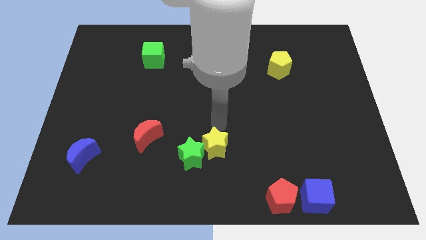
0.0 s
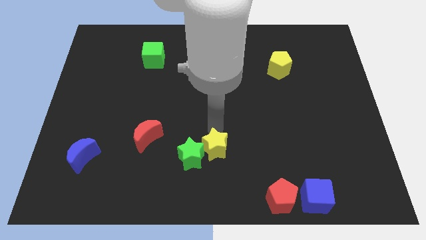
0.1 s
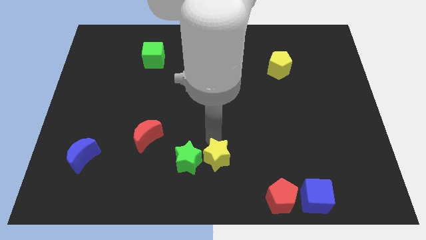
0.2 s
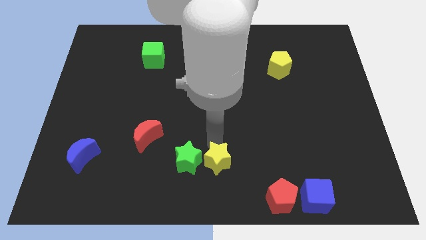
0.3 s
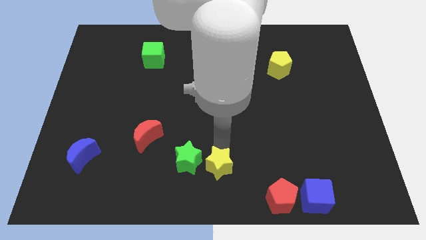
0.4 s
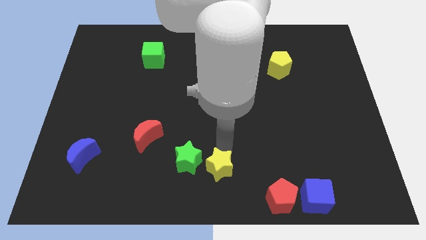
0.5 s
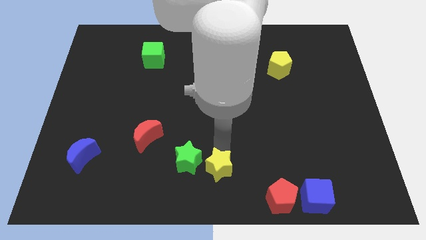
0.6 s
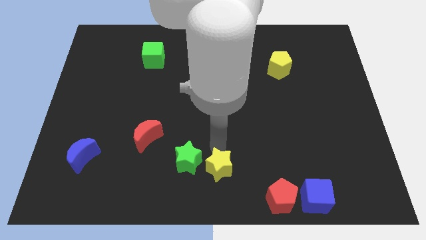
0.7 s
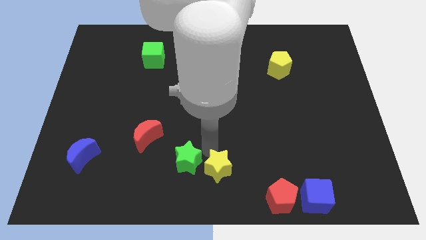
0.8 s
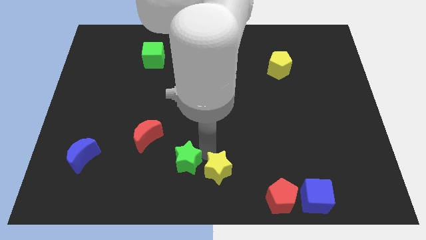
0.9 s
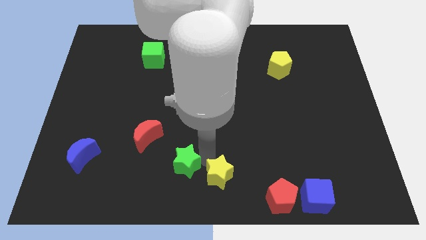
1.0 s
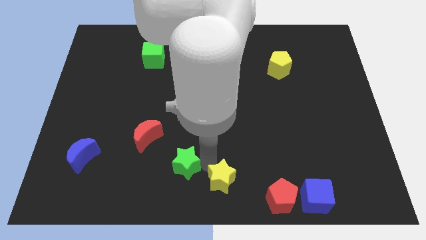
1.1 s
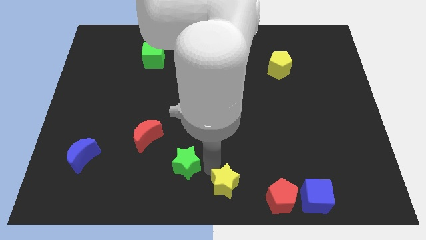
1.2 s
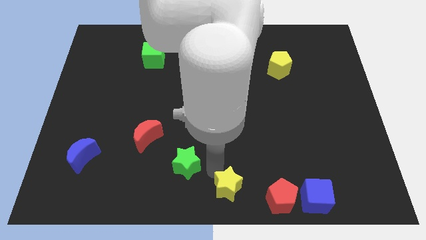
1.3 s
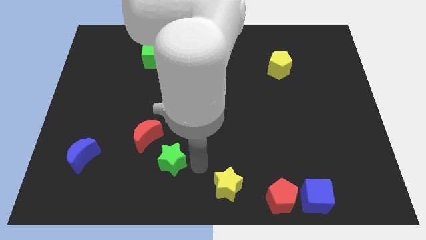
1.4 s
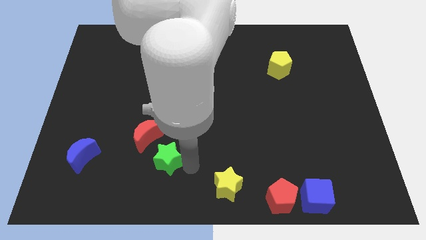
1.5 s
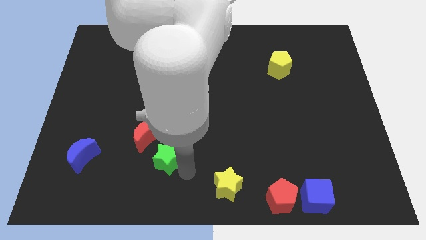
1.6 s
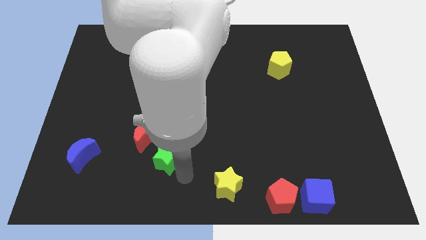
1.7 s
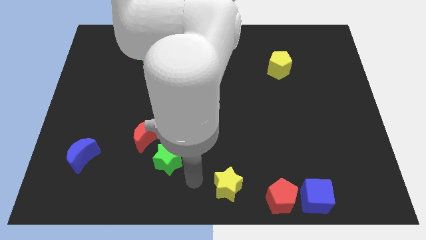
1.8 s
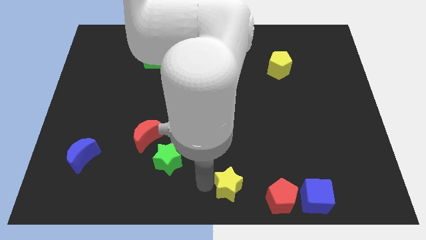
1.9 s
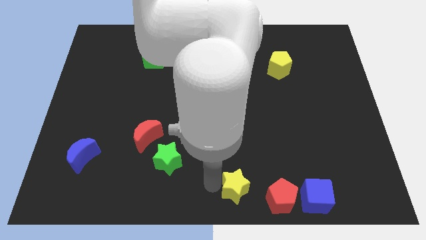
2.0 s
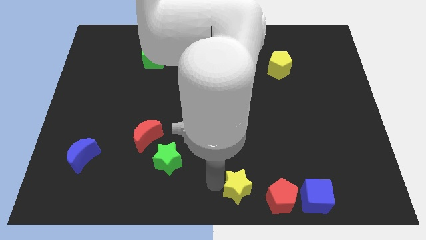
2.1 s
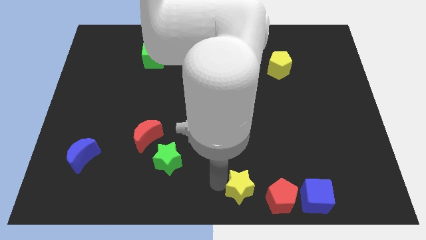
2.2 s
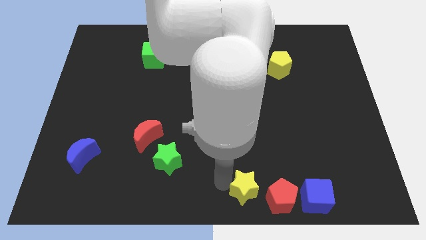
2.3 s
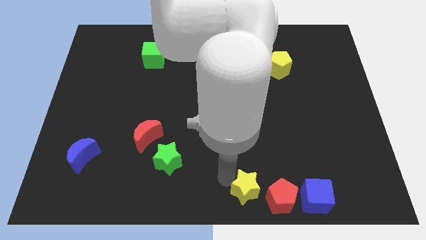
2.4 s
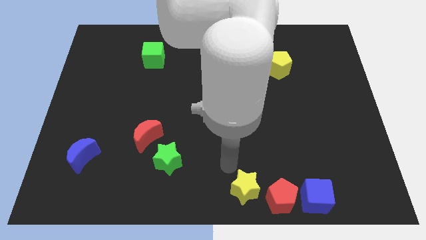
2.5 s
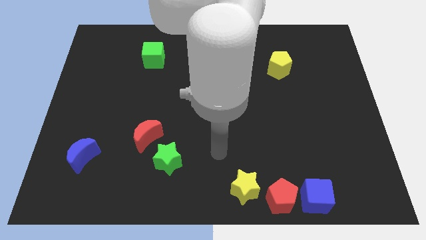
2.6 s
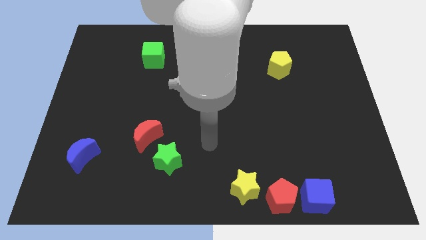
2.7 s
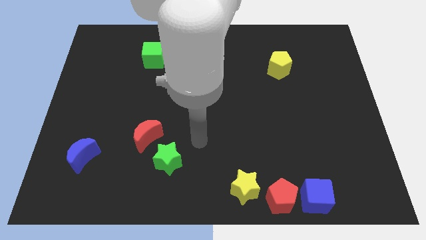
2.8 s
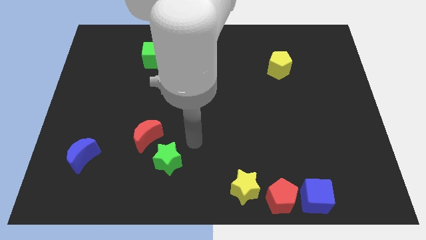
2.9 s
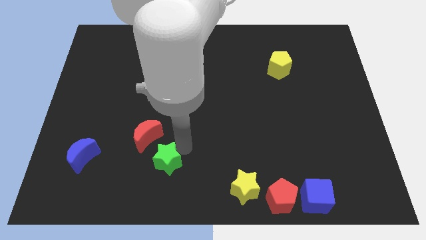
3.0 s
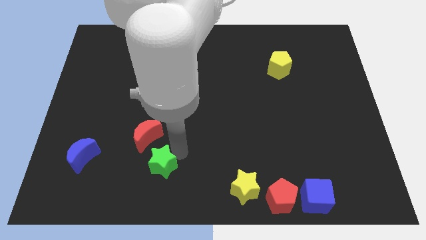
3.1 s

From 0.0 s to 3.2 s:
push the yellow star to the left of the red pentagon

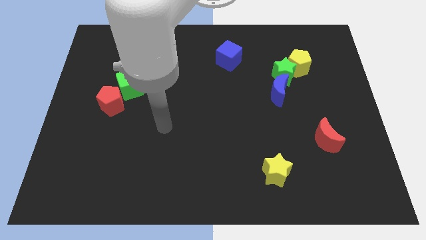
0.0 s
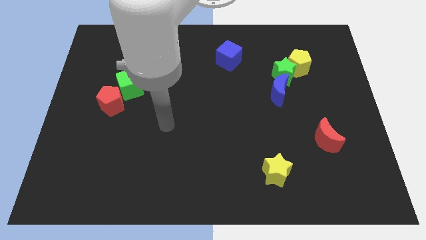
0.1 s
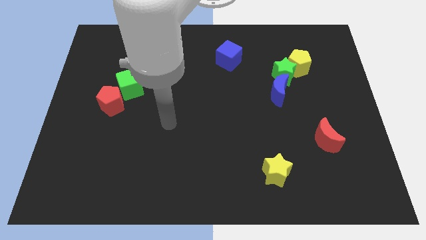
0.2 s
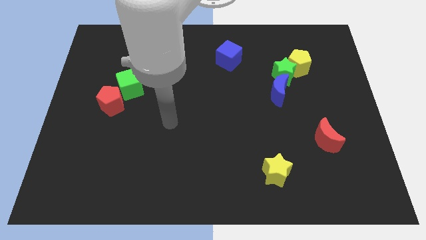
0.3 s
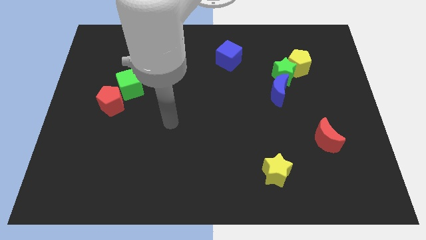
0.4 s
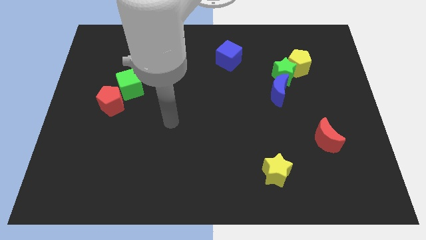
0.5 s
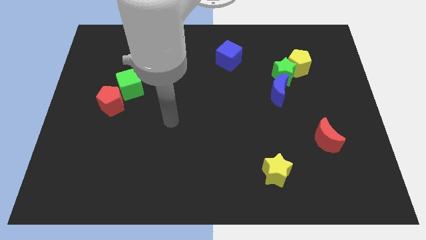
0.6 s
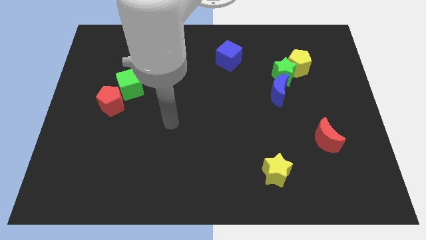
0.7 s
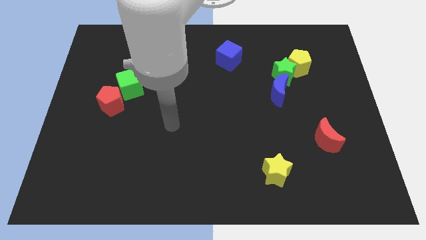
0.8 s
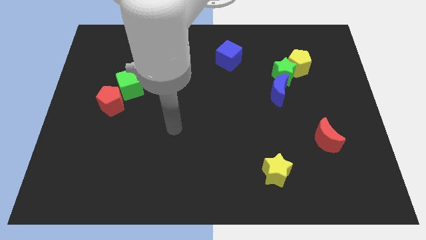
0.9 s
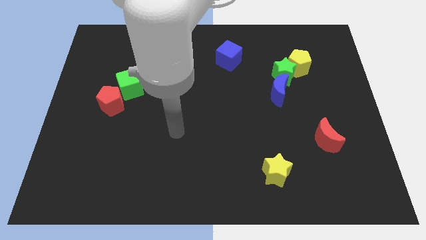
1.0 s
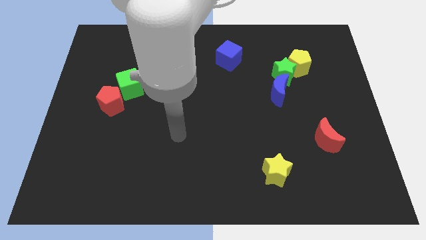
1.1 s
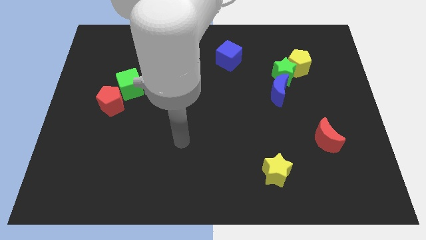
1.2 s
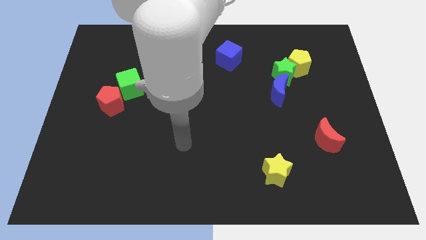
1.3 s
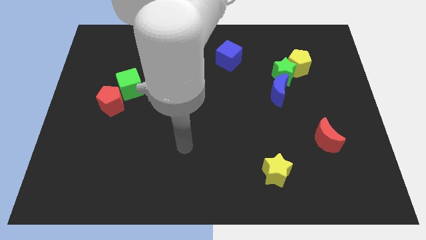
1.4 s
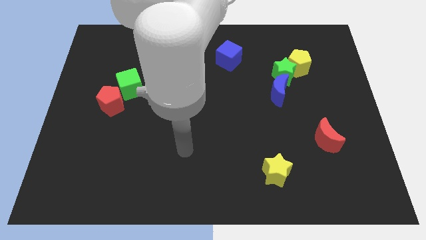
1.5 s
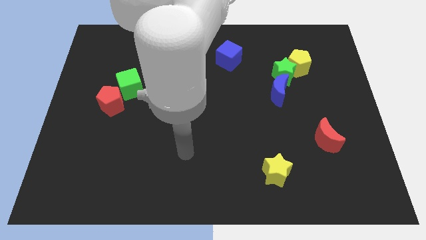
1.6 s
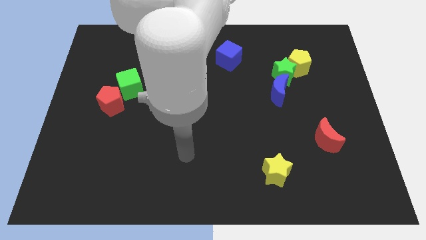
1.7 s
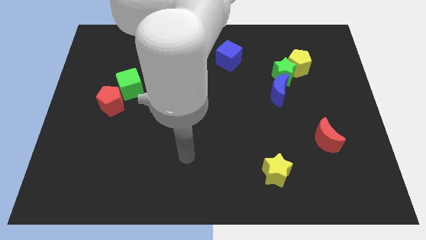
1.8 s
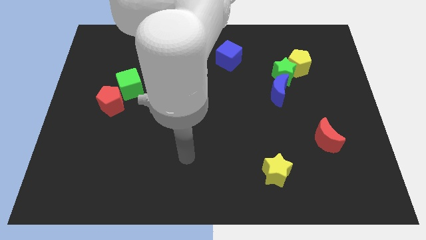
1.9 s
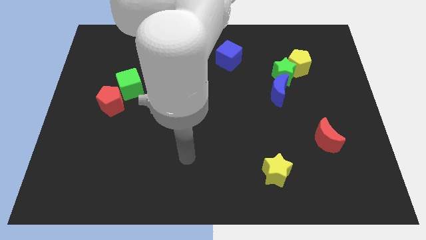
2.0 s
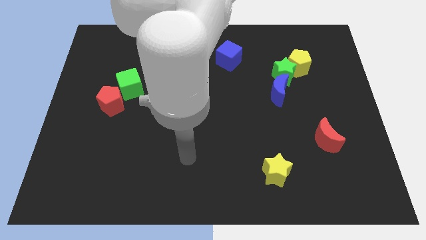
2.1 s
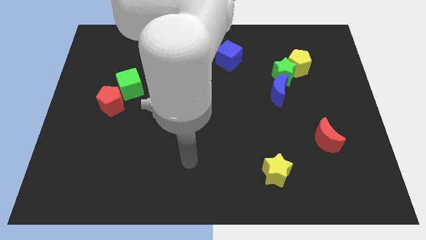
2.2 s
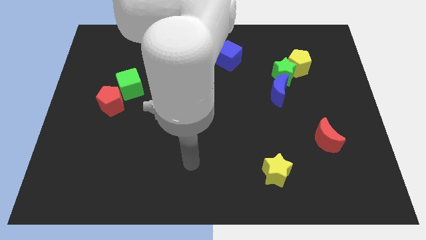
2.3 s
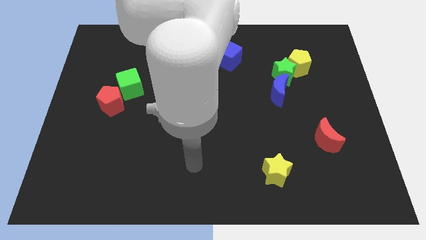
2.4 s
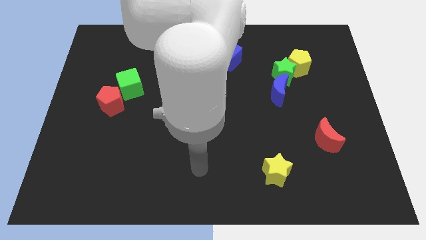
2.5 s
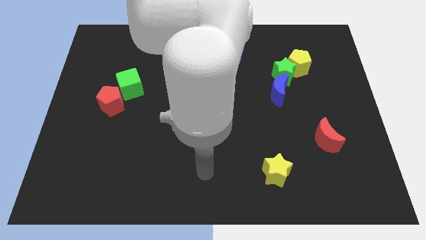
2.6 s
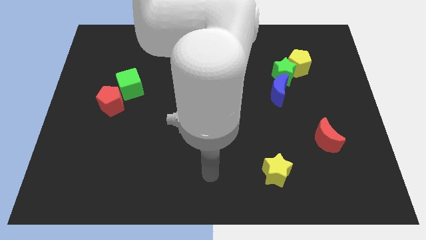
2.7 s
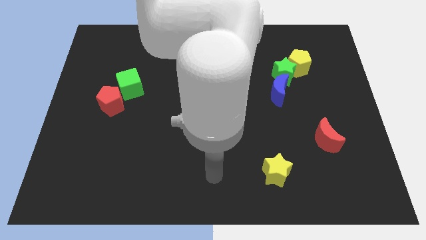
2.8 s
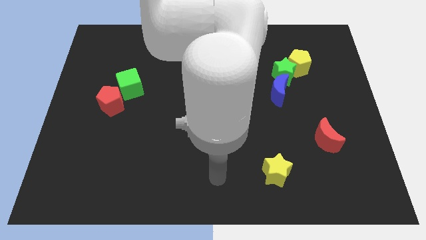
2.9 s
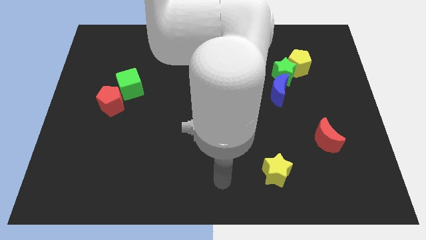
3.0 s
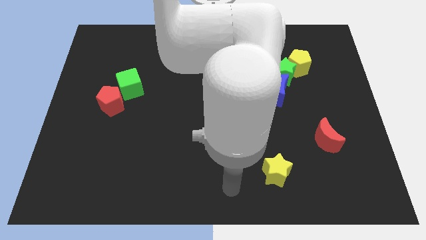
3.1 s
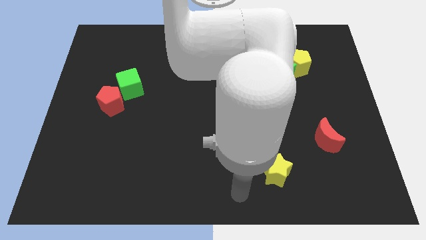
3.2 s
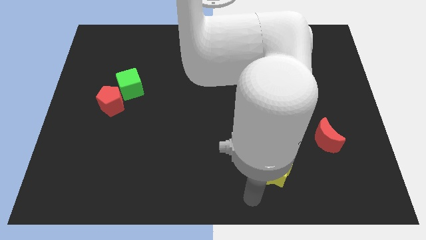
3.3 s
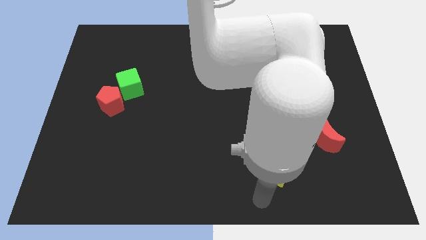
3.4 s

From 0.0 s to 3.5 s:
move your hand towards the bottom left of the yellow star

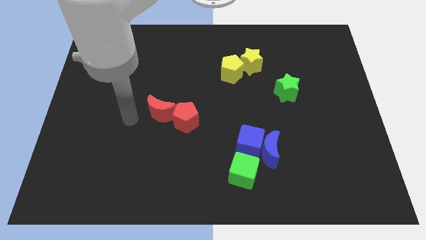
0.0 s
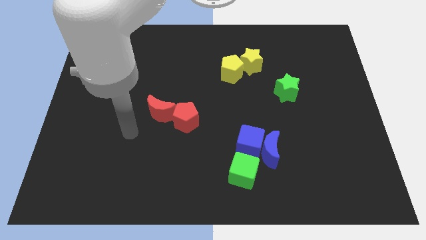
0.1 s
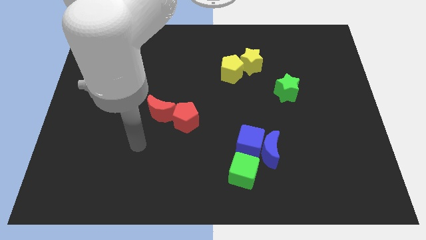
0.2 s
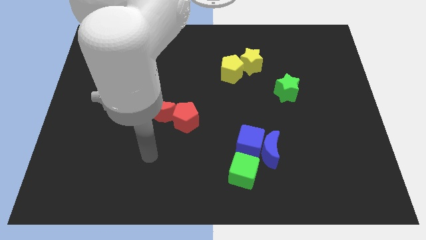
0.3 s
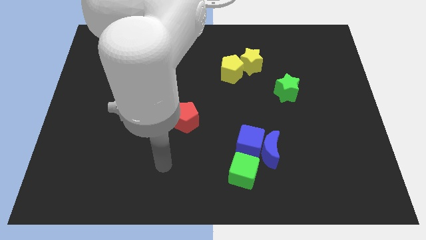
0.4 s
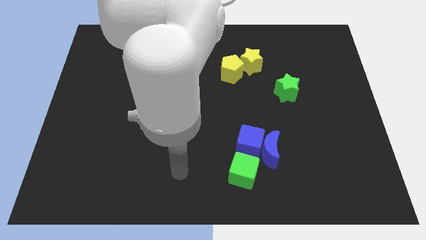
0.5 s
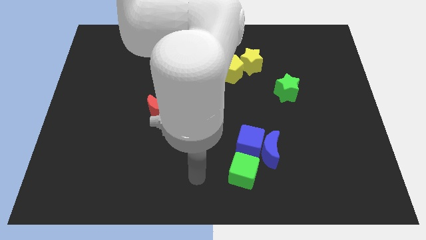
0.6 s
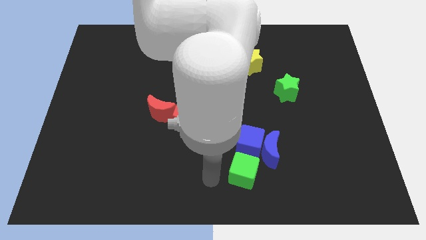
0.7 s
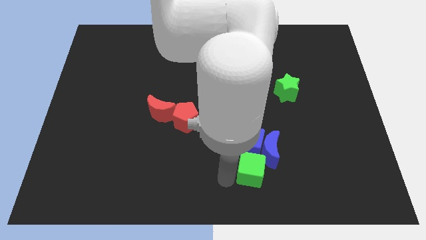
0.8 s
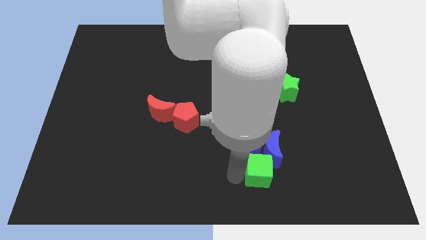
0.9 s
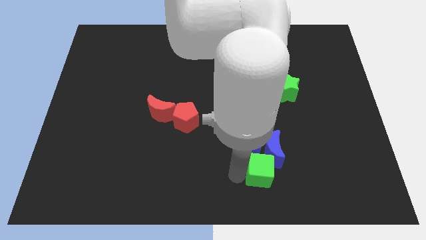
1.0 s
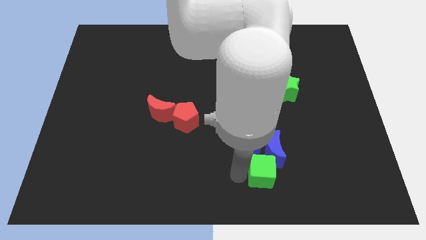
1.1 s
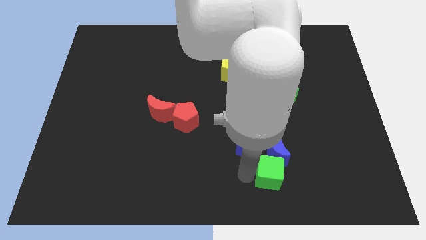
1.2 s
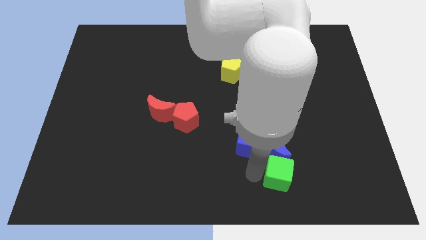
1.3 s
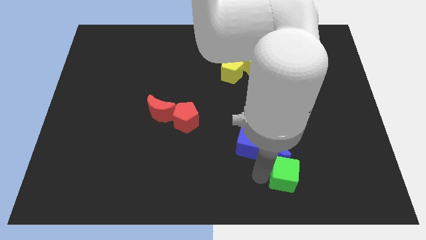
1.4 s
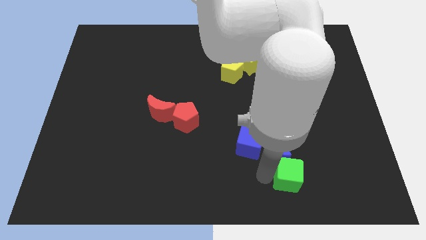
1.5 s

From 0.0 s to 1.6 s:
push the green cube into the bottom of the blue crescent

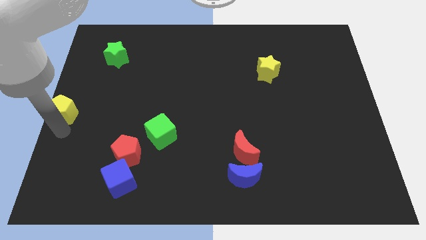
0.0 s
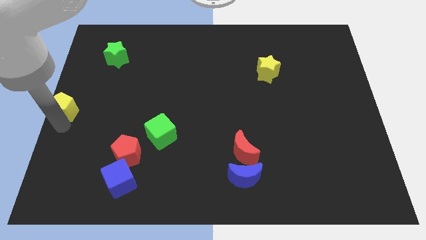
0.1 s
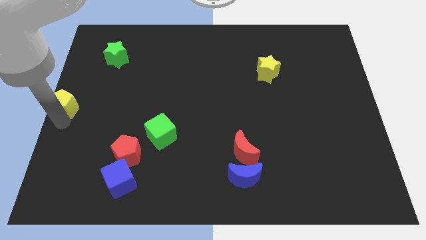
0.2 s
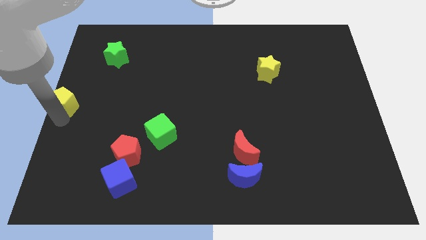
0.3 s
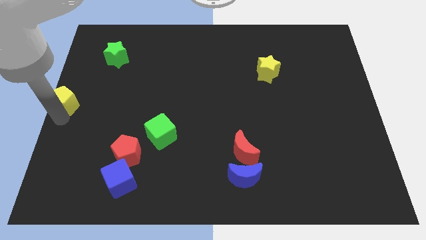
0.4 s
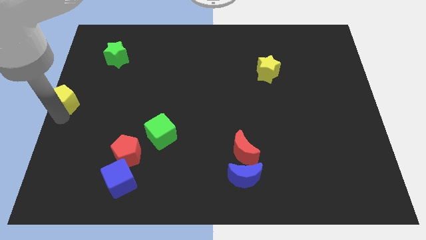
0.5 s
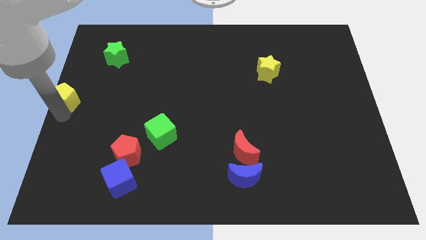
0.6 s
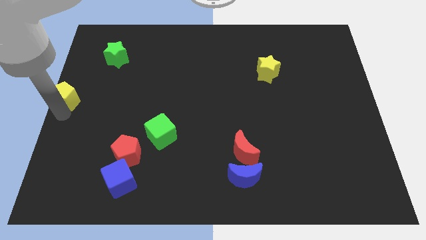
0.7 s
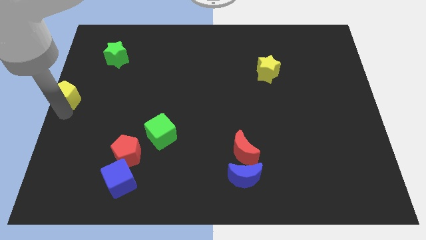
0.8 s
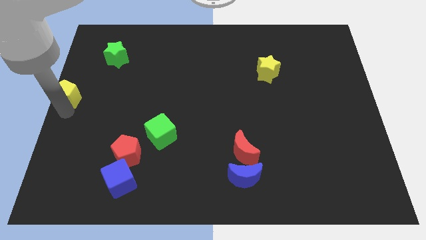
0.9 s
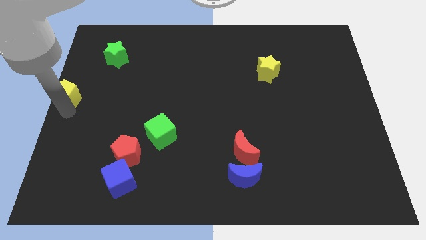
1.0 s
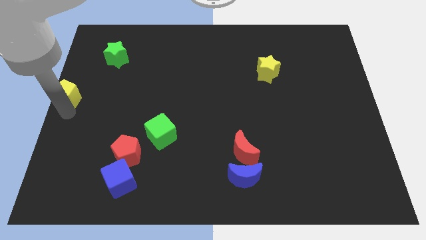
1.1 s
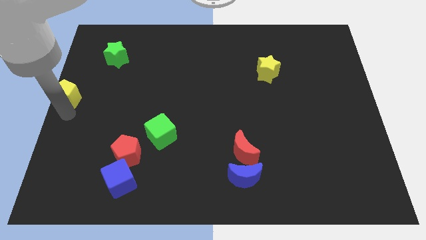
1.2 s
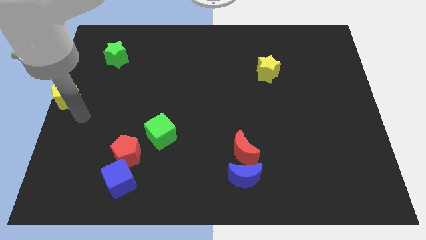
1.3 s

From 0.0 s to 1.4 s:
move yellow pentagon upwards
